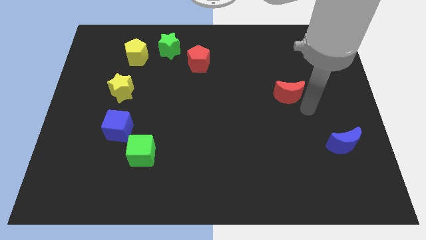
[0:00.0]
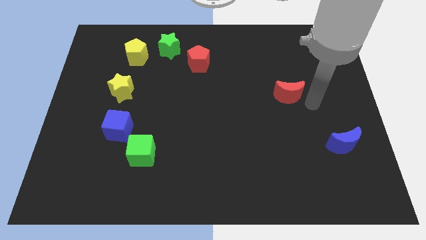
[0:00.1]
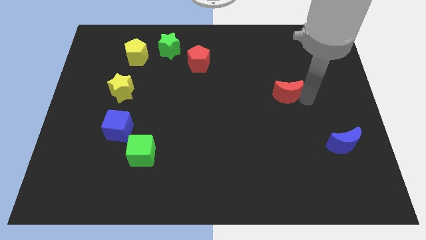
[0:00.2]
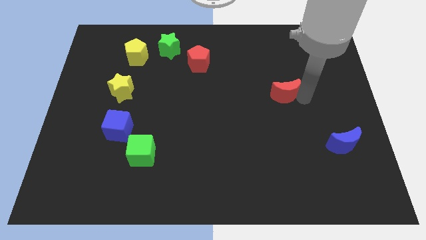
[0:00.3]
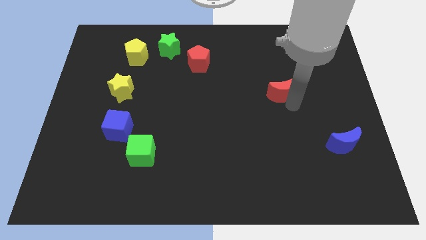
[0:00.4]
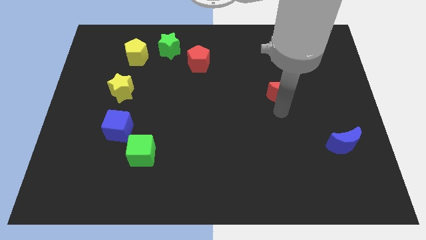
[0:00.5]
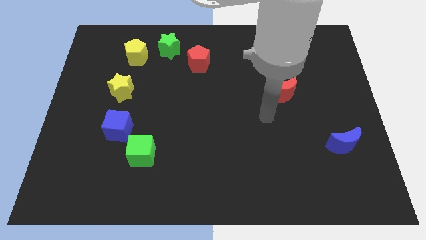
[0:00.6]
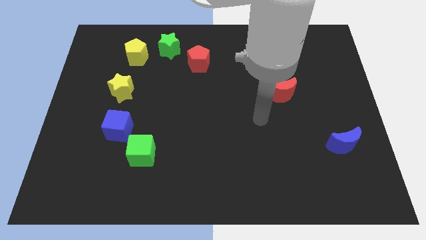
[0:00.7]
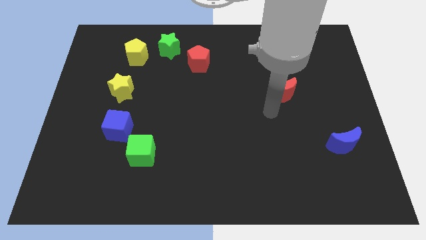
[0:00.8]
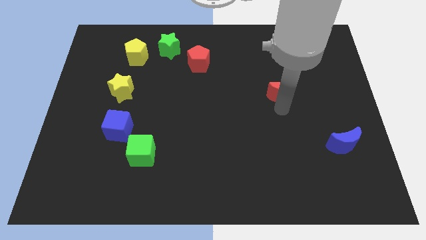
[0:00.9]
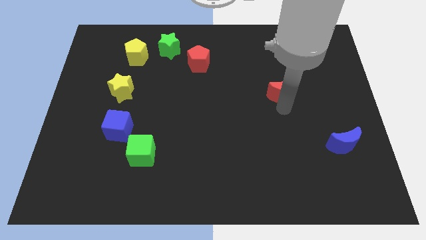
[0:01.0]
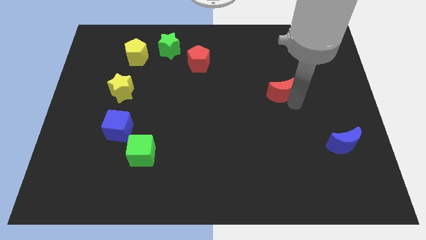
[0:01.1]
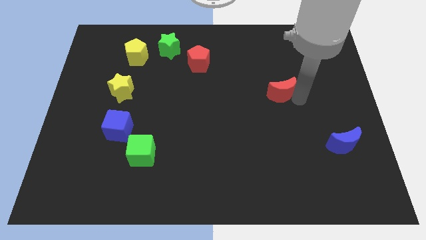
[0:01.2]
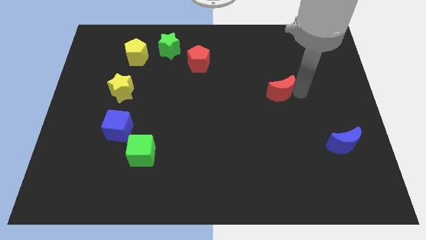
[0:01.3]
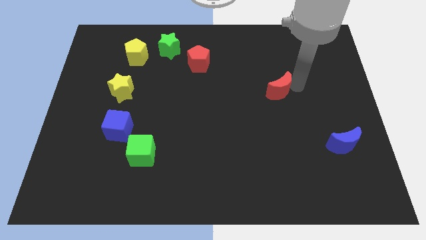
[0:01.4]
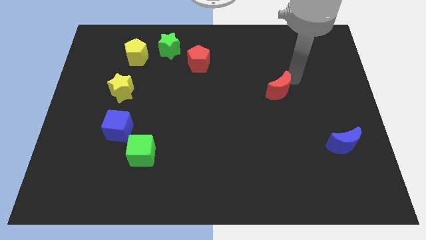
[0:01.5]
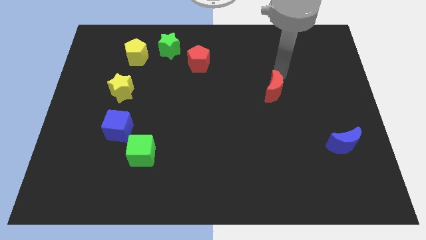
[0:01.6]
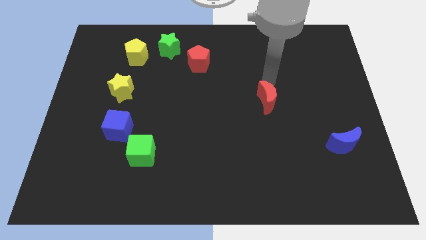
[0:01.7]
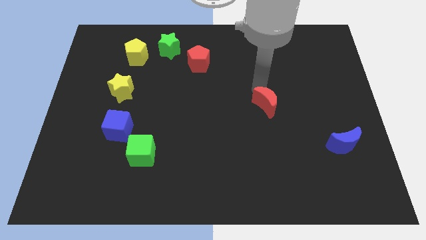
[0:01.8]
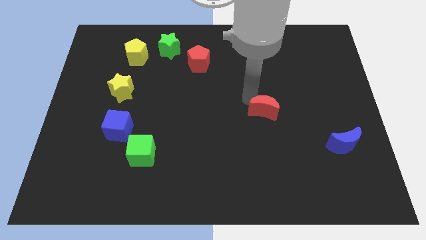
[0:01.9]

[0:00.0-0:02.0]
push the red crescent to the center of the board

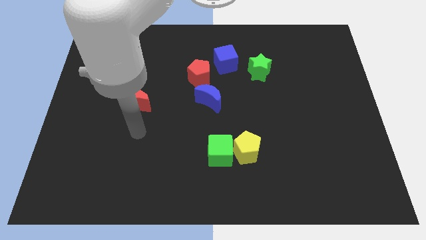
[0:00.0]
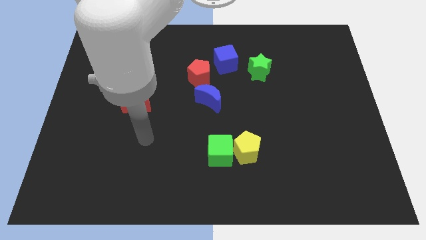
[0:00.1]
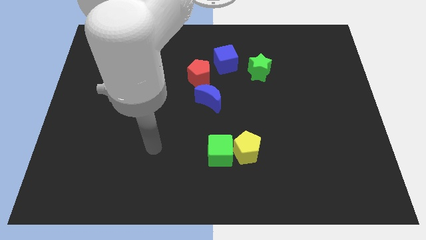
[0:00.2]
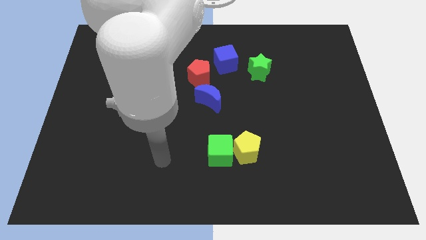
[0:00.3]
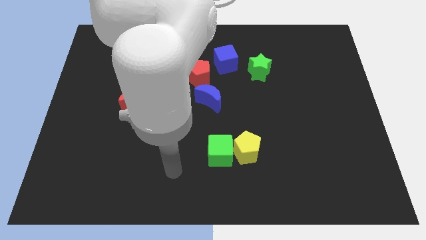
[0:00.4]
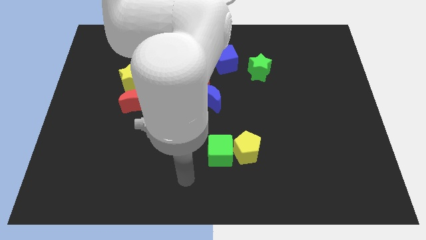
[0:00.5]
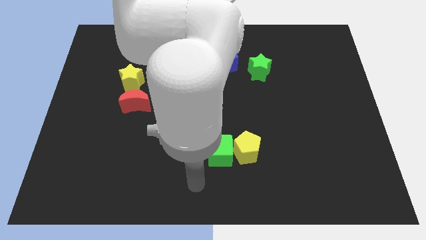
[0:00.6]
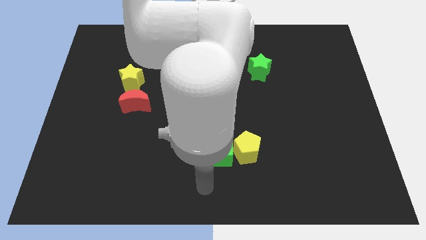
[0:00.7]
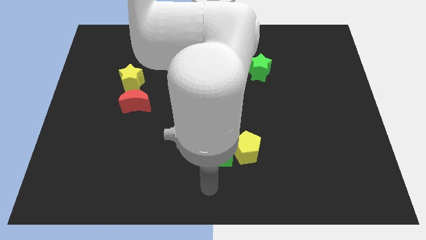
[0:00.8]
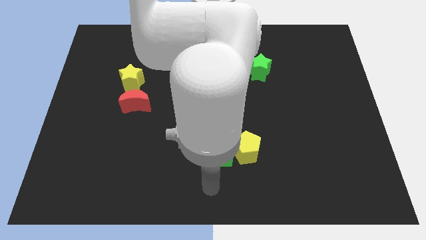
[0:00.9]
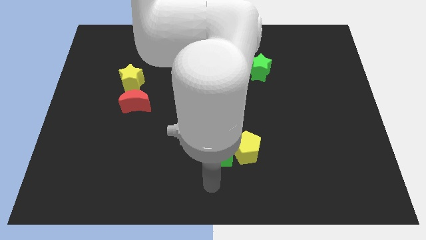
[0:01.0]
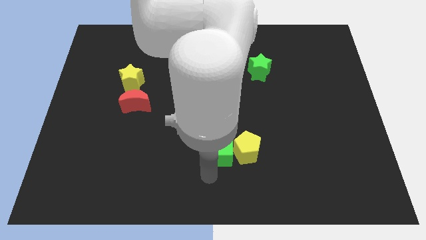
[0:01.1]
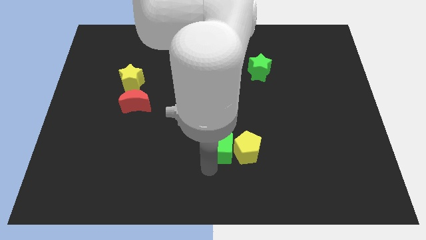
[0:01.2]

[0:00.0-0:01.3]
point your arm to the bottom of green cube

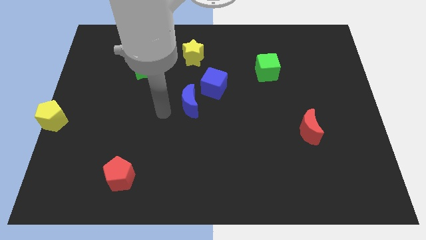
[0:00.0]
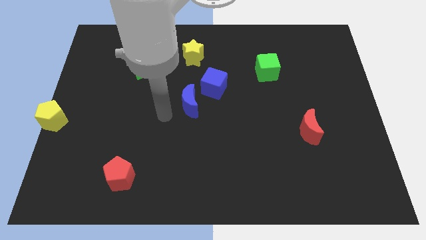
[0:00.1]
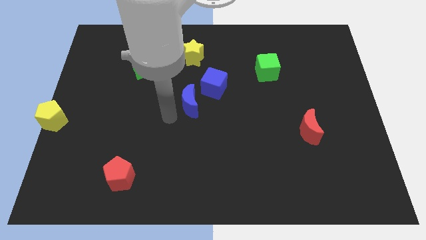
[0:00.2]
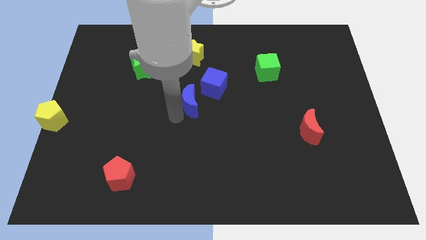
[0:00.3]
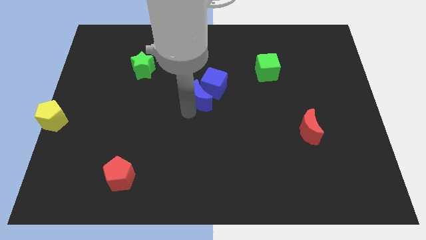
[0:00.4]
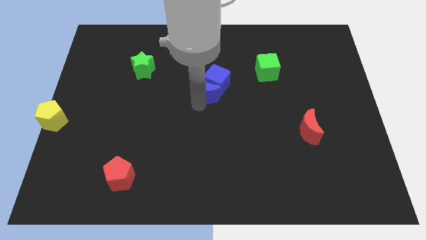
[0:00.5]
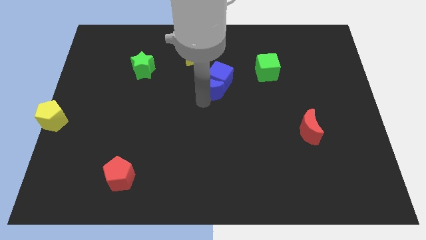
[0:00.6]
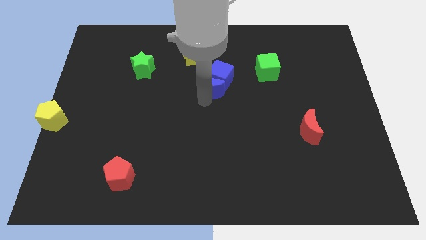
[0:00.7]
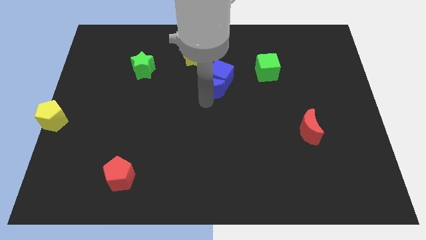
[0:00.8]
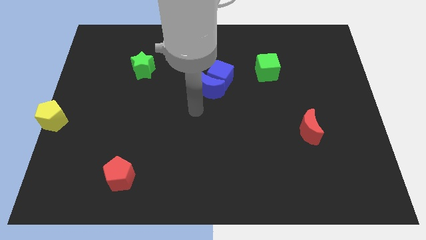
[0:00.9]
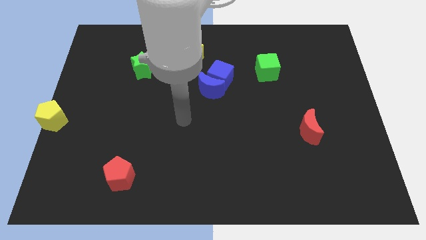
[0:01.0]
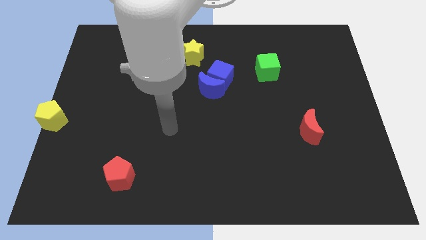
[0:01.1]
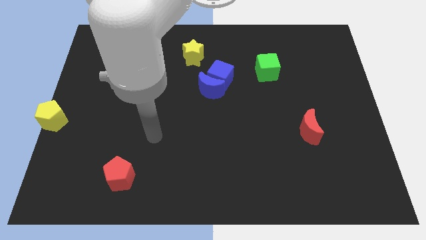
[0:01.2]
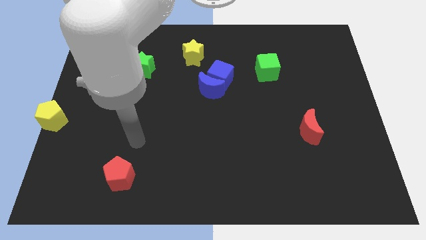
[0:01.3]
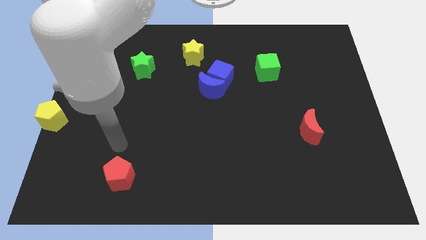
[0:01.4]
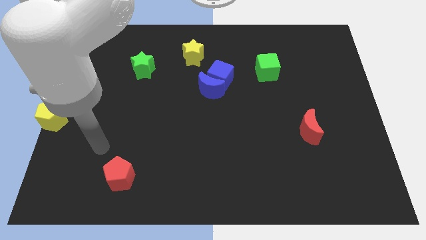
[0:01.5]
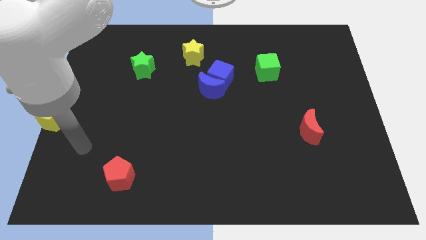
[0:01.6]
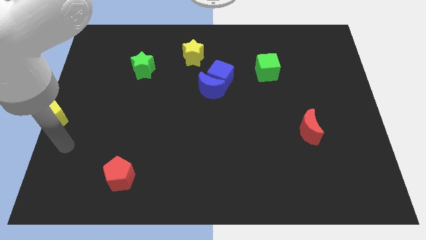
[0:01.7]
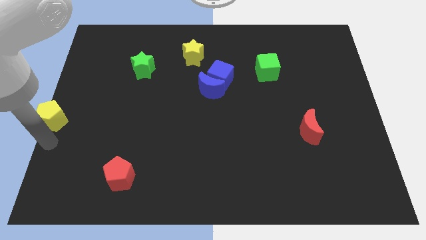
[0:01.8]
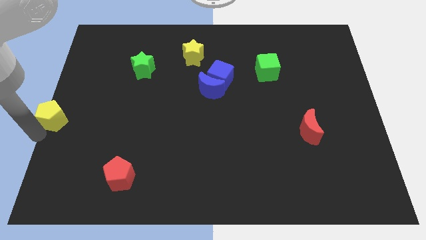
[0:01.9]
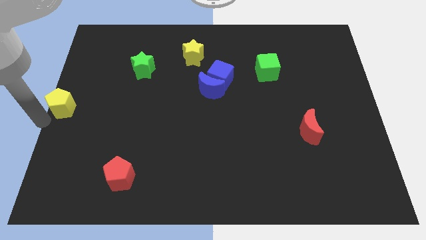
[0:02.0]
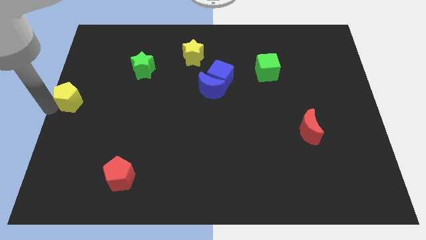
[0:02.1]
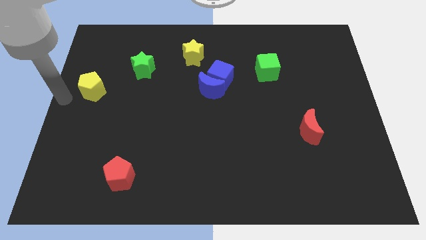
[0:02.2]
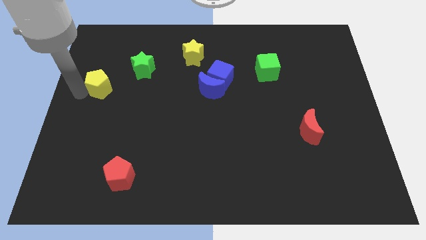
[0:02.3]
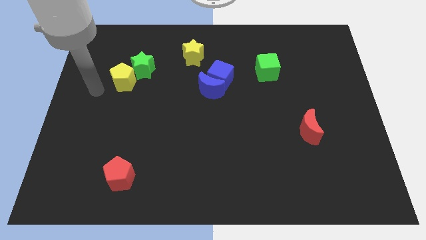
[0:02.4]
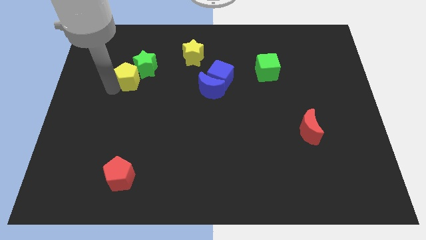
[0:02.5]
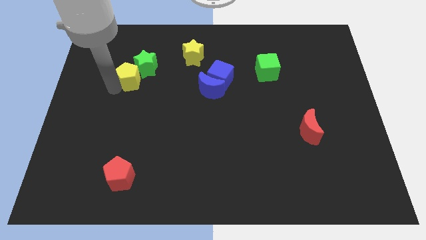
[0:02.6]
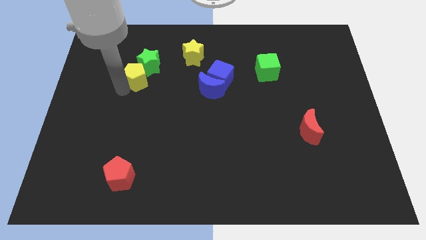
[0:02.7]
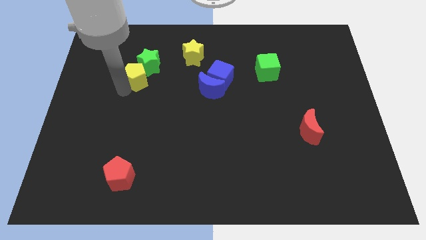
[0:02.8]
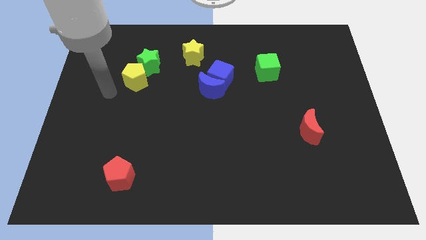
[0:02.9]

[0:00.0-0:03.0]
move your arm away from the blue crescent

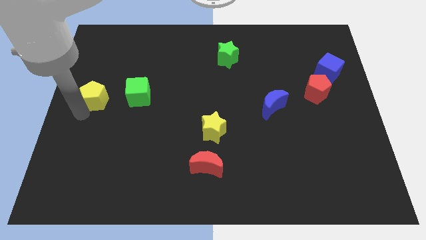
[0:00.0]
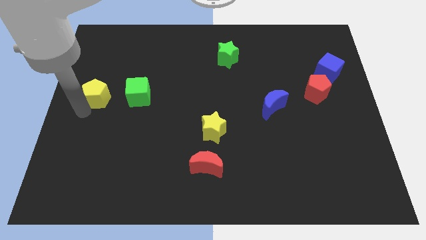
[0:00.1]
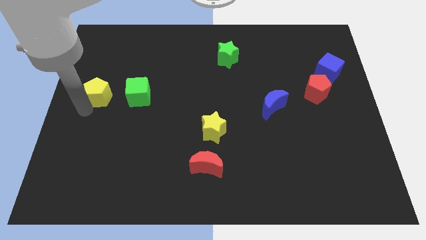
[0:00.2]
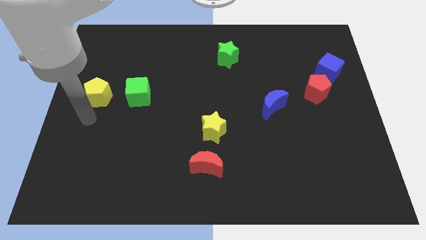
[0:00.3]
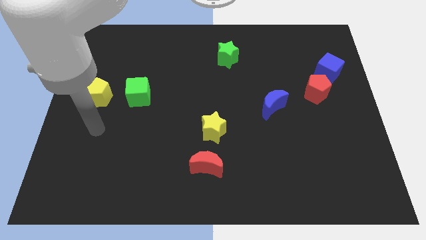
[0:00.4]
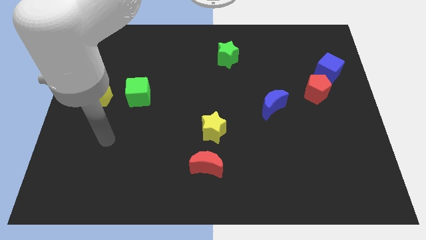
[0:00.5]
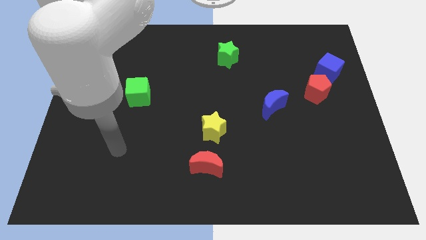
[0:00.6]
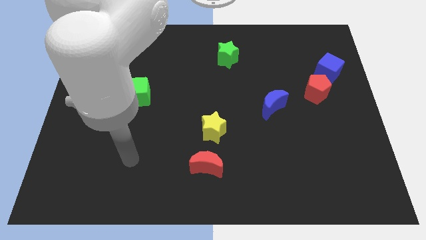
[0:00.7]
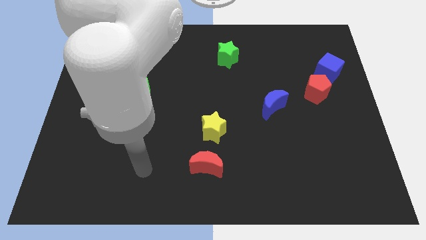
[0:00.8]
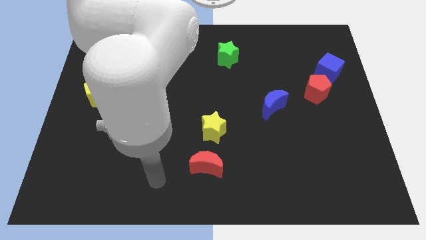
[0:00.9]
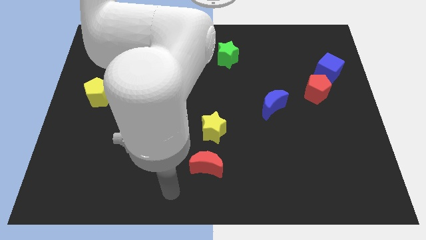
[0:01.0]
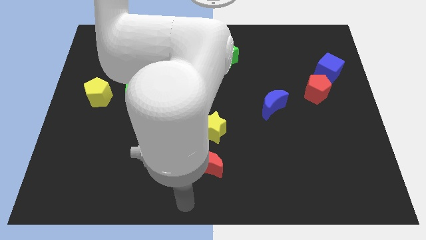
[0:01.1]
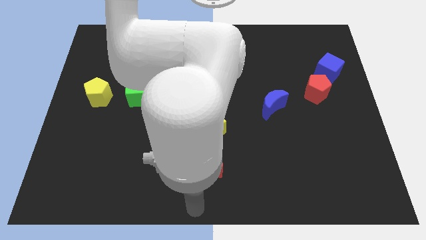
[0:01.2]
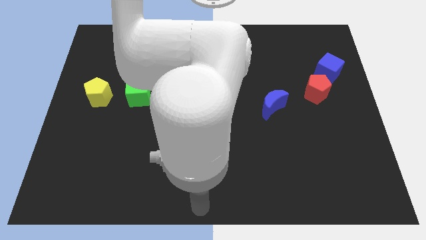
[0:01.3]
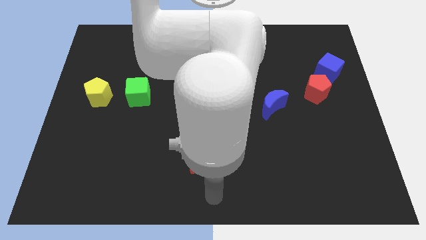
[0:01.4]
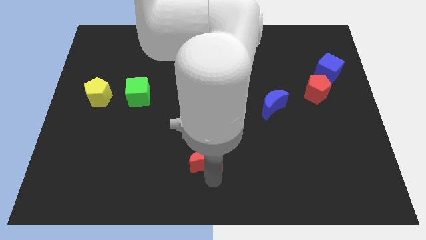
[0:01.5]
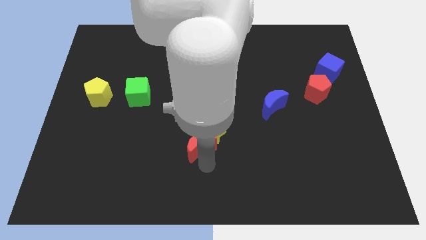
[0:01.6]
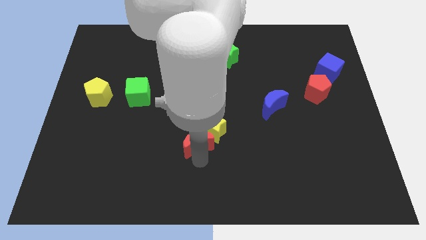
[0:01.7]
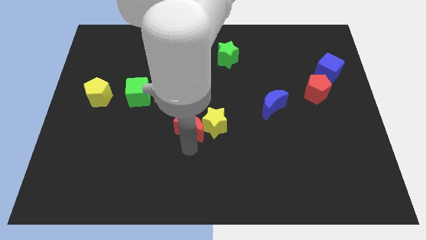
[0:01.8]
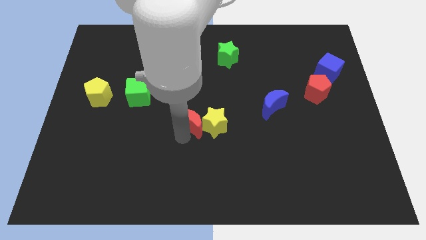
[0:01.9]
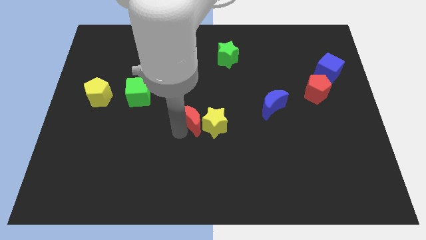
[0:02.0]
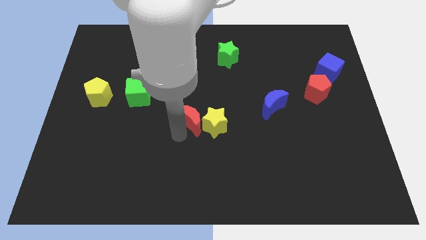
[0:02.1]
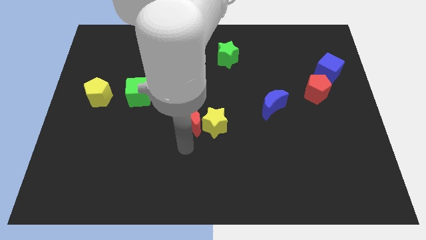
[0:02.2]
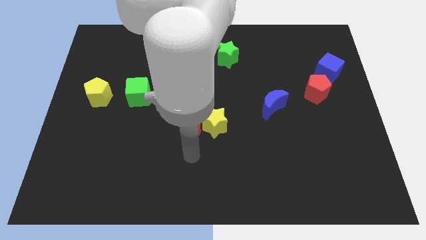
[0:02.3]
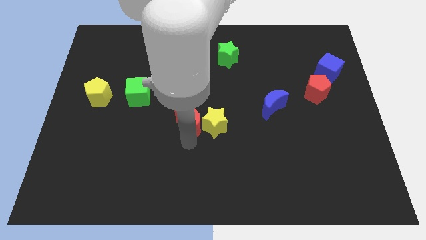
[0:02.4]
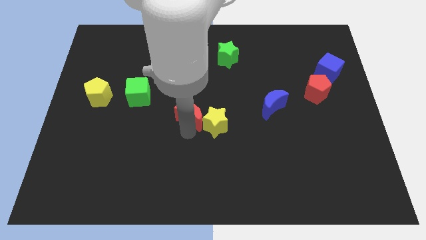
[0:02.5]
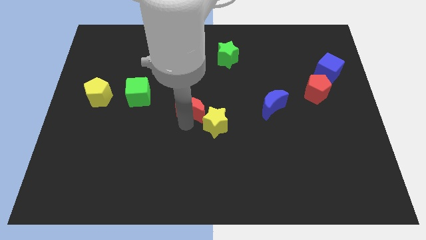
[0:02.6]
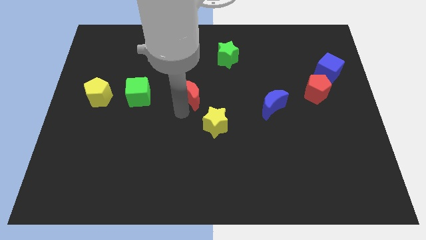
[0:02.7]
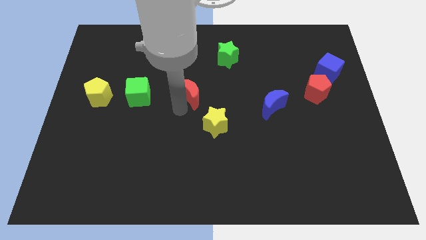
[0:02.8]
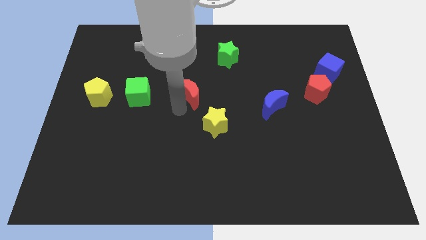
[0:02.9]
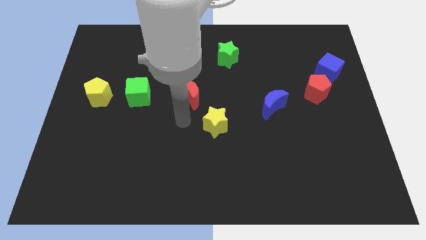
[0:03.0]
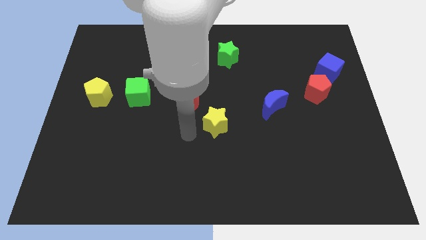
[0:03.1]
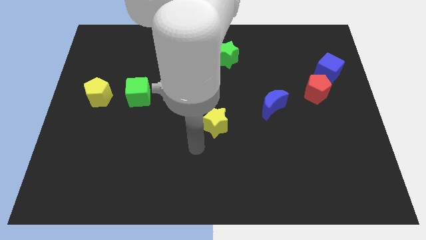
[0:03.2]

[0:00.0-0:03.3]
place the red moon to the right of green cube
